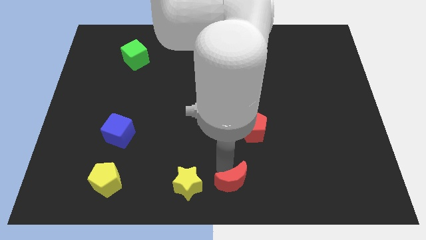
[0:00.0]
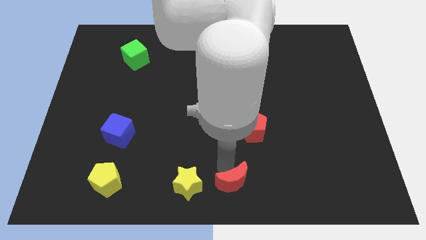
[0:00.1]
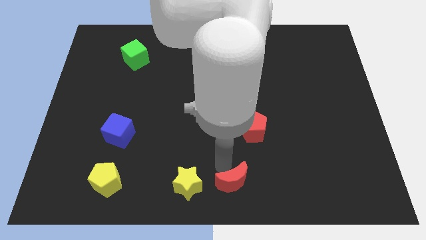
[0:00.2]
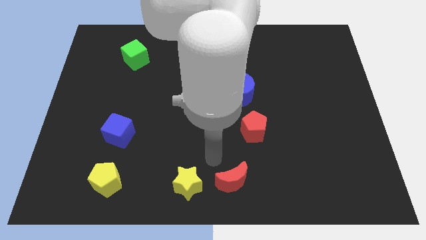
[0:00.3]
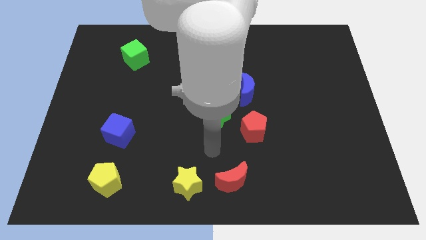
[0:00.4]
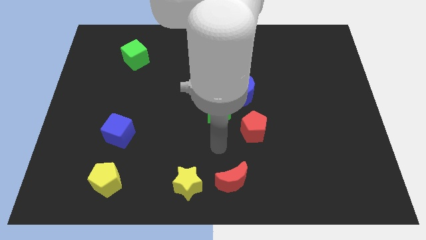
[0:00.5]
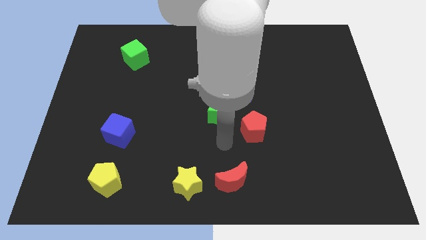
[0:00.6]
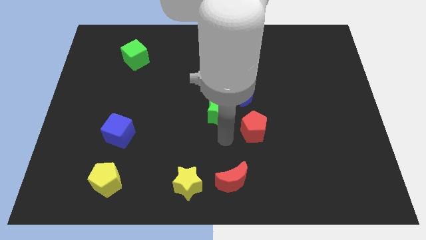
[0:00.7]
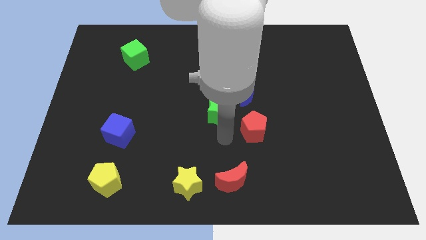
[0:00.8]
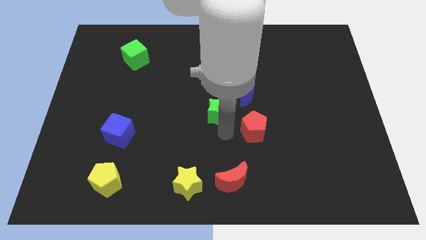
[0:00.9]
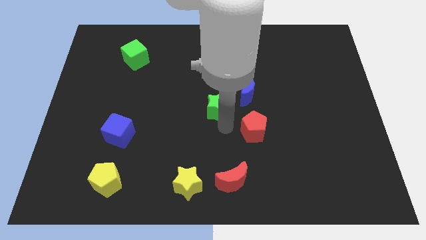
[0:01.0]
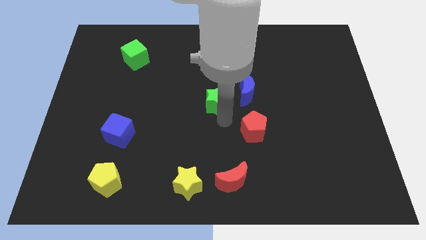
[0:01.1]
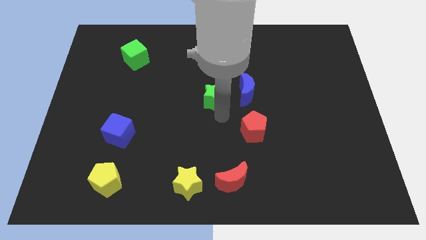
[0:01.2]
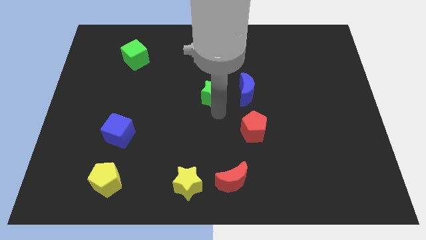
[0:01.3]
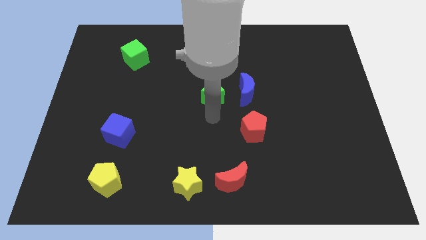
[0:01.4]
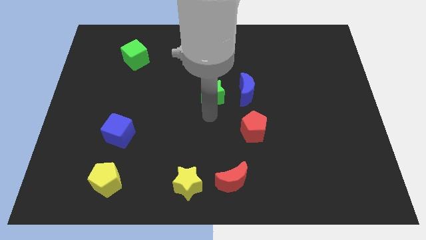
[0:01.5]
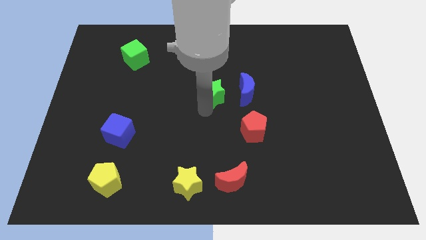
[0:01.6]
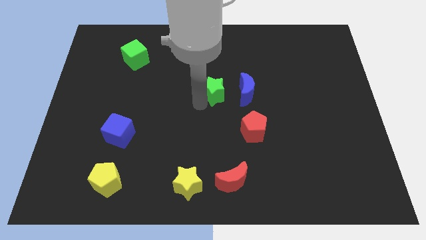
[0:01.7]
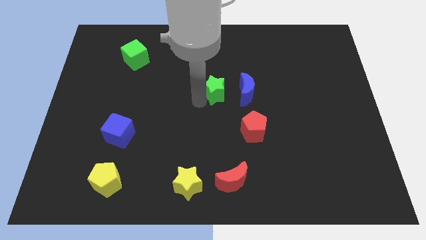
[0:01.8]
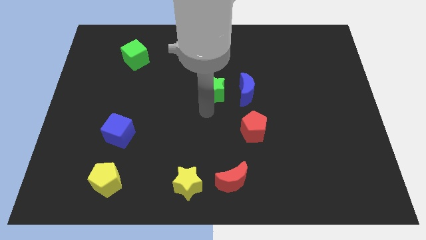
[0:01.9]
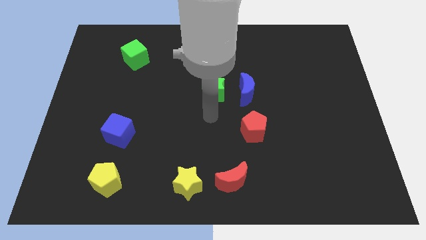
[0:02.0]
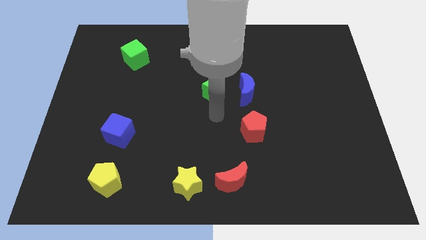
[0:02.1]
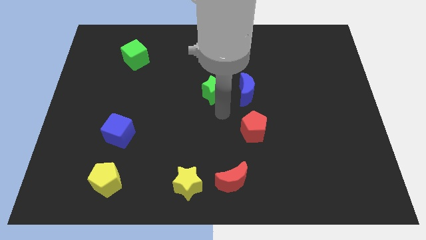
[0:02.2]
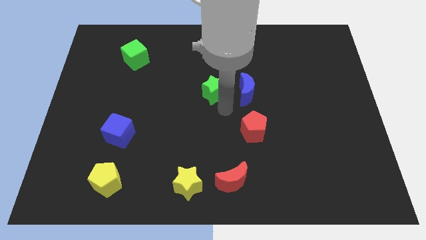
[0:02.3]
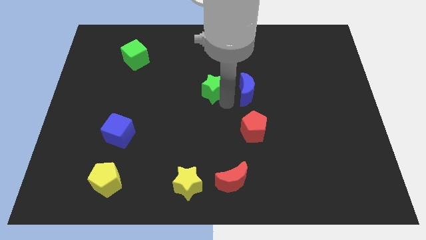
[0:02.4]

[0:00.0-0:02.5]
place green star to the left of blue moon

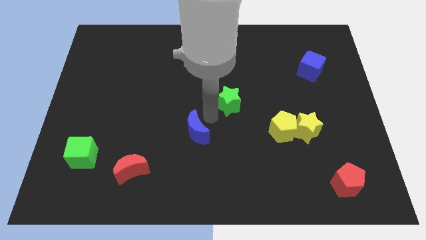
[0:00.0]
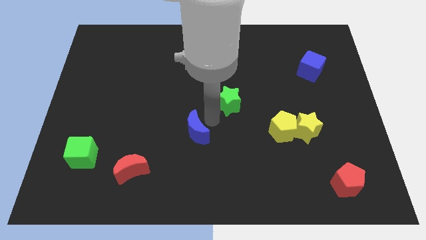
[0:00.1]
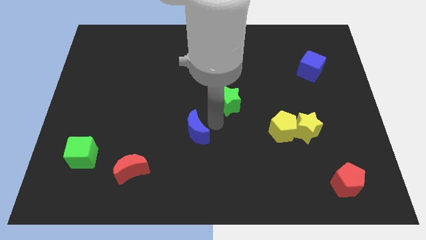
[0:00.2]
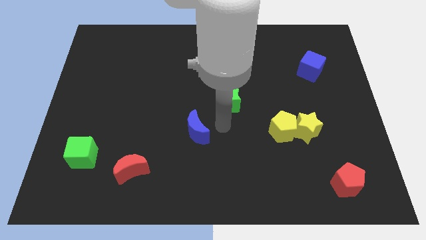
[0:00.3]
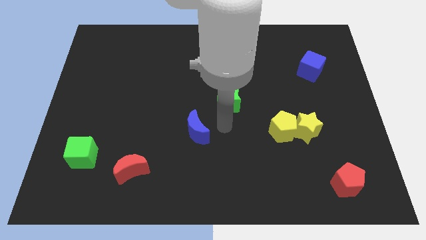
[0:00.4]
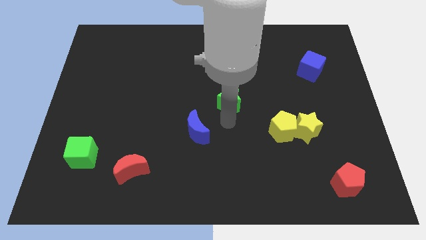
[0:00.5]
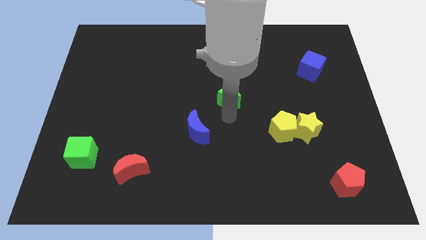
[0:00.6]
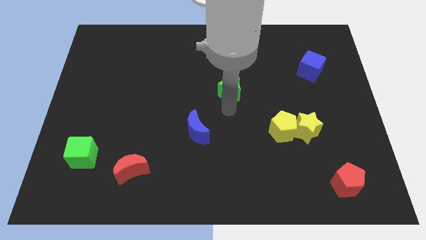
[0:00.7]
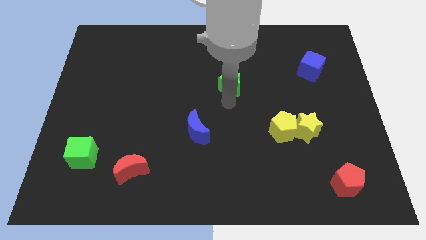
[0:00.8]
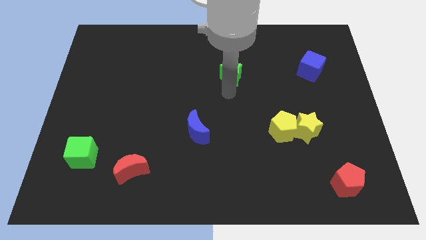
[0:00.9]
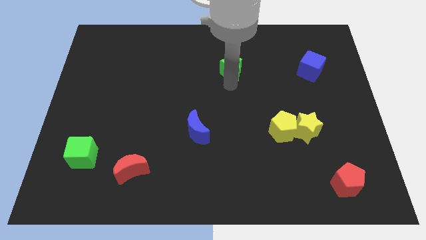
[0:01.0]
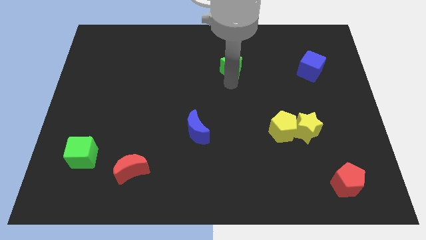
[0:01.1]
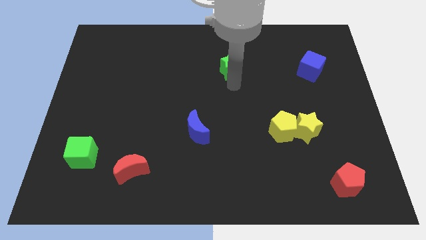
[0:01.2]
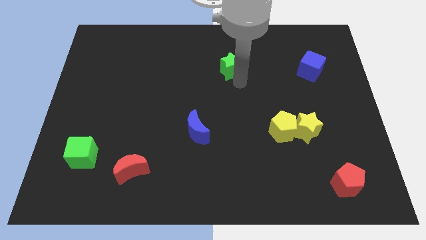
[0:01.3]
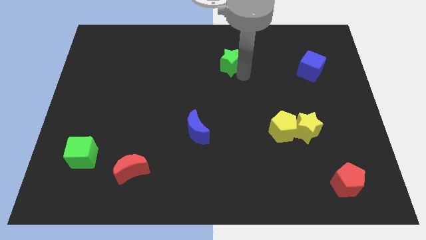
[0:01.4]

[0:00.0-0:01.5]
place green star to the left of blue cube

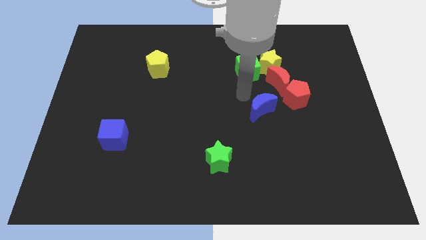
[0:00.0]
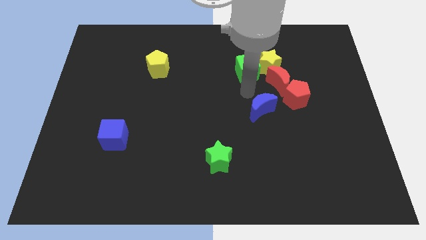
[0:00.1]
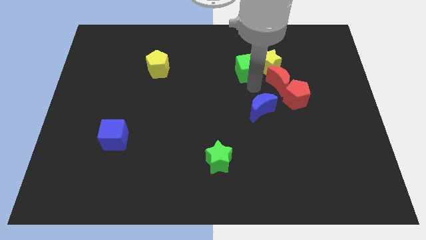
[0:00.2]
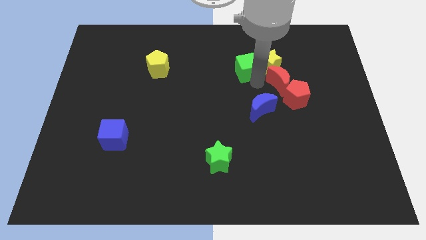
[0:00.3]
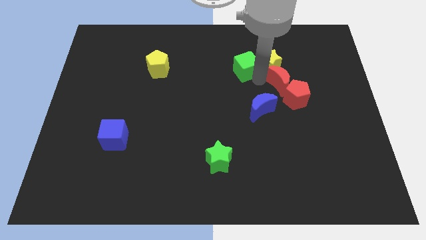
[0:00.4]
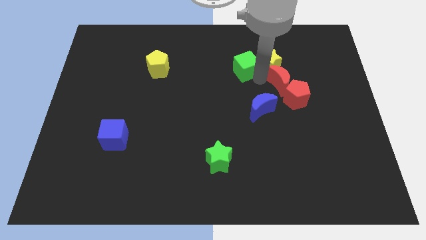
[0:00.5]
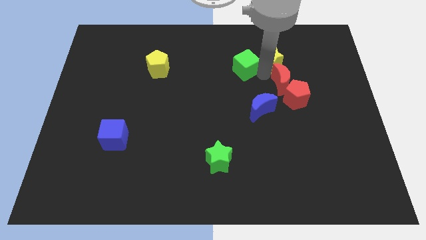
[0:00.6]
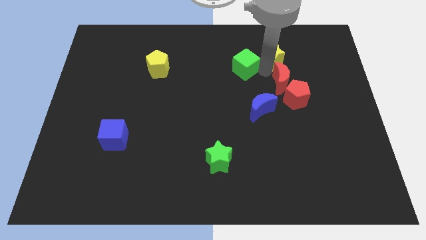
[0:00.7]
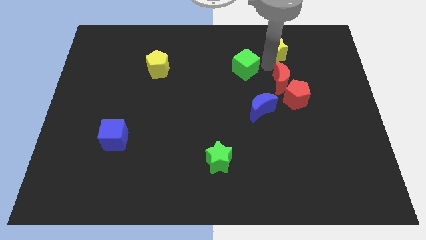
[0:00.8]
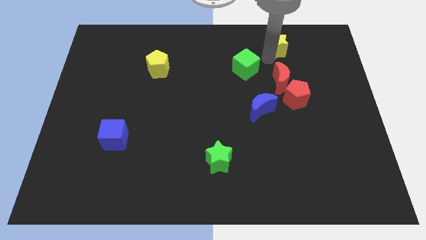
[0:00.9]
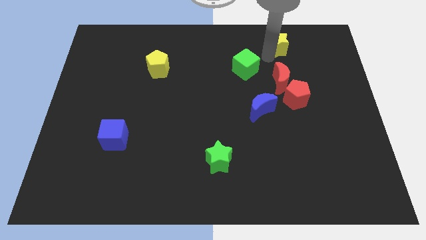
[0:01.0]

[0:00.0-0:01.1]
place the yellow star above the red moon

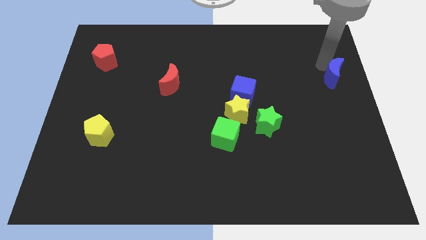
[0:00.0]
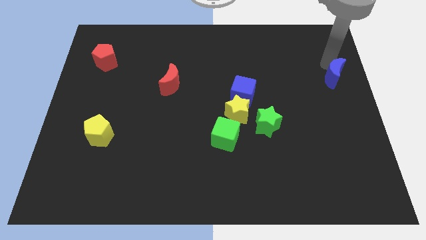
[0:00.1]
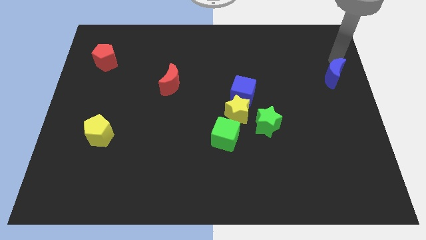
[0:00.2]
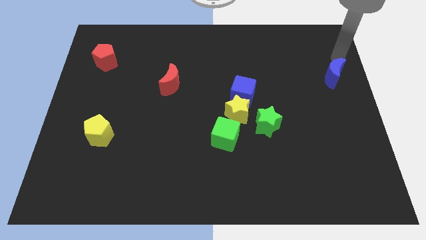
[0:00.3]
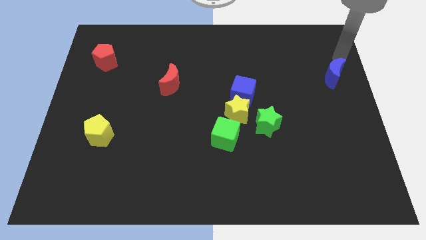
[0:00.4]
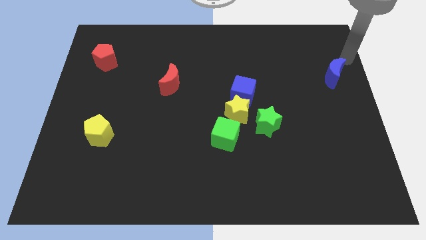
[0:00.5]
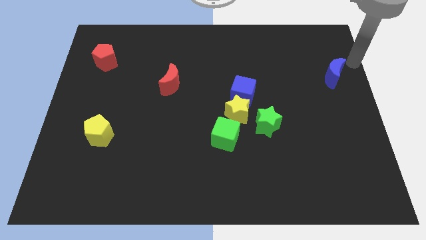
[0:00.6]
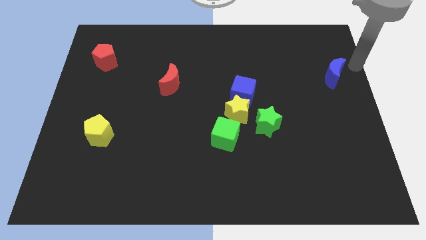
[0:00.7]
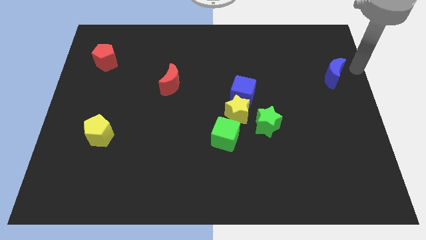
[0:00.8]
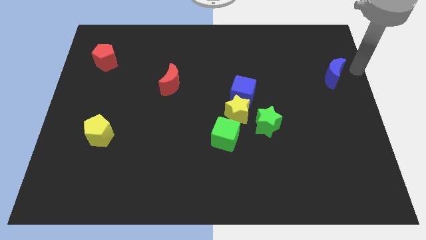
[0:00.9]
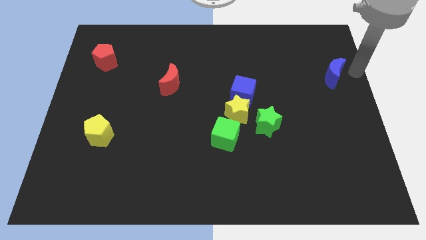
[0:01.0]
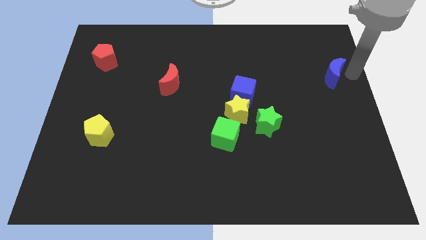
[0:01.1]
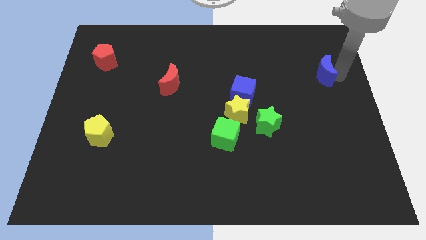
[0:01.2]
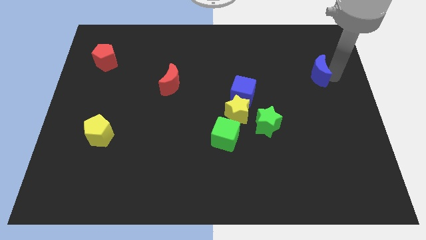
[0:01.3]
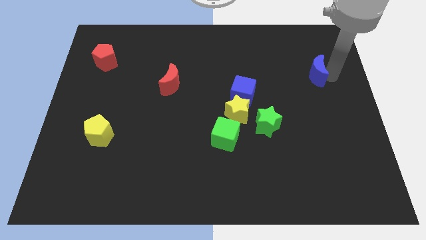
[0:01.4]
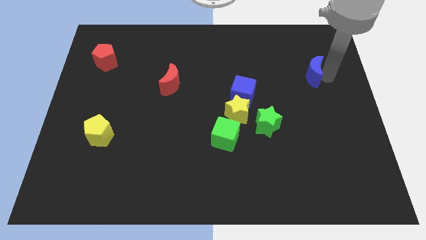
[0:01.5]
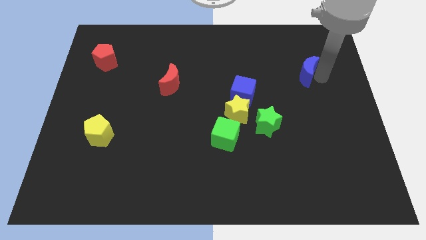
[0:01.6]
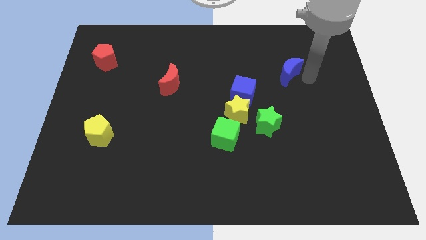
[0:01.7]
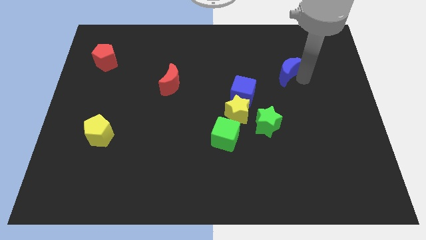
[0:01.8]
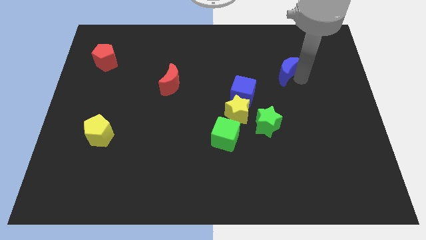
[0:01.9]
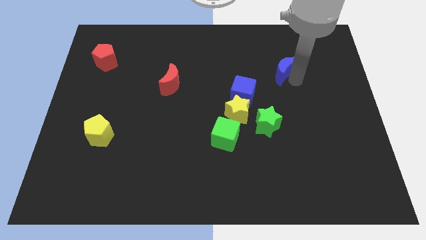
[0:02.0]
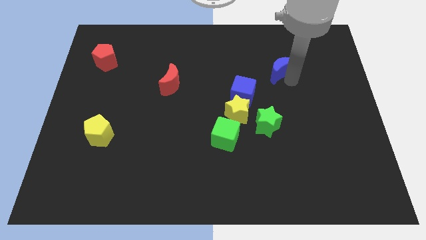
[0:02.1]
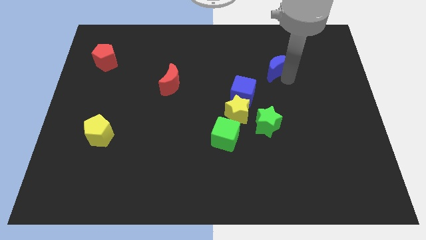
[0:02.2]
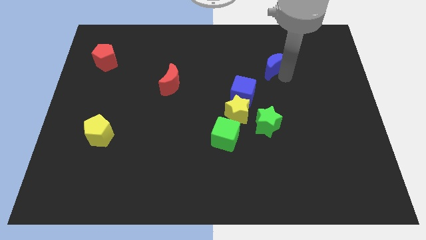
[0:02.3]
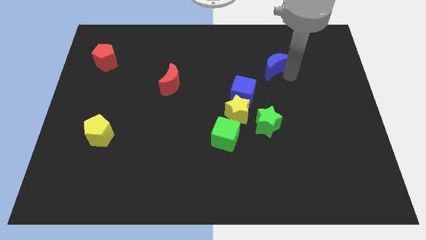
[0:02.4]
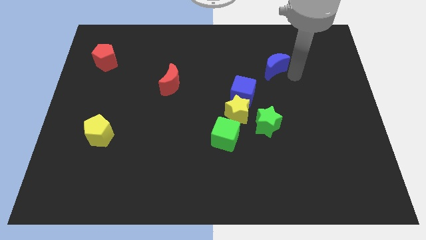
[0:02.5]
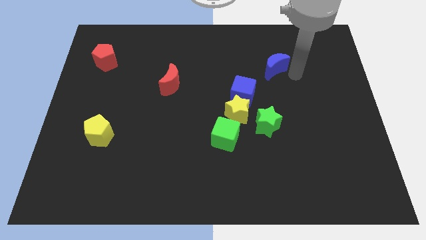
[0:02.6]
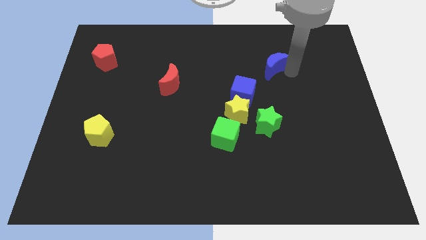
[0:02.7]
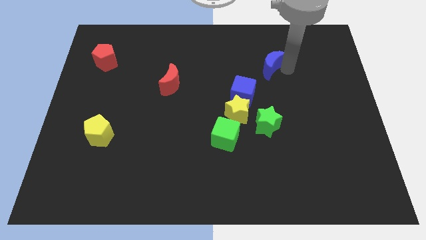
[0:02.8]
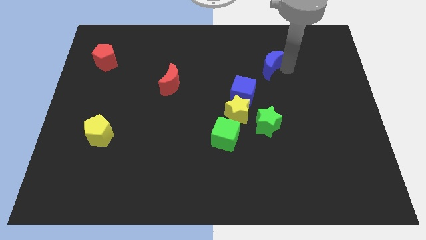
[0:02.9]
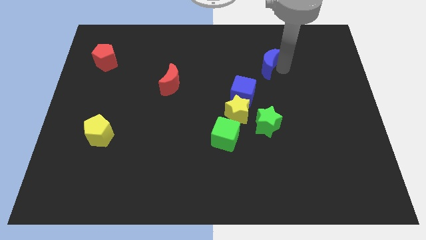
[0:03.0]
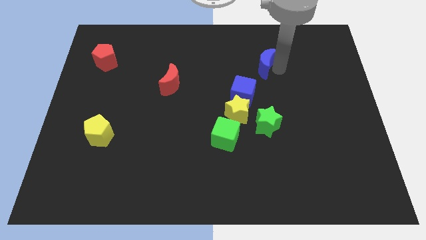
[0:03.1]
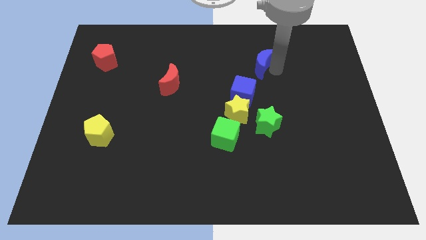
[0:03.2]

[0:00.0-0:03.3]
push the blue crescent towards the top right side of the blue cube

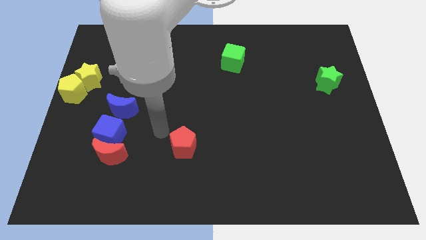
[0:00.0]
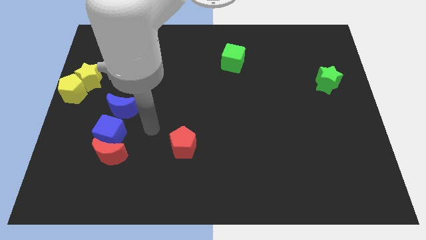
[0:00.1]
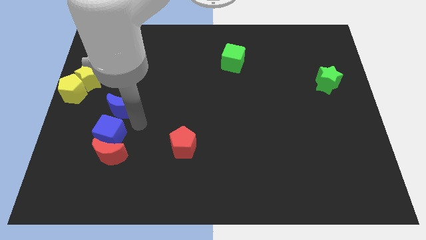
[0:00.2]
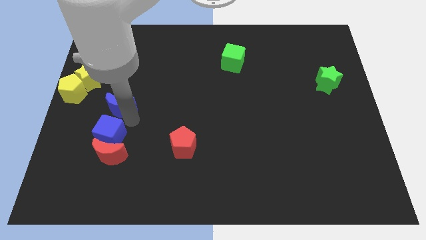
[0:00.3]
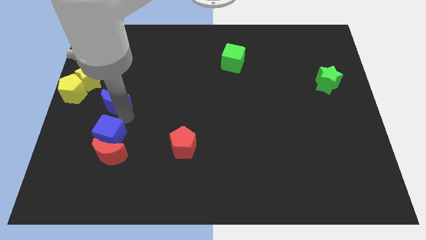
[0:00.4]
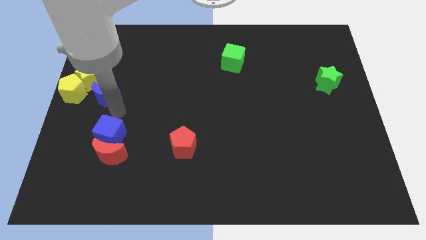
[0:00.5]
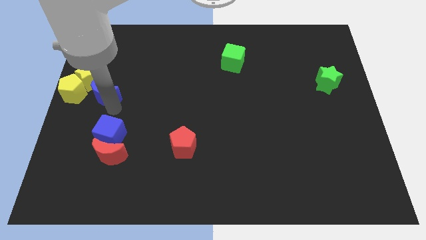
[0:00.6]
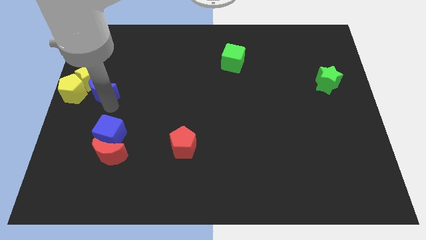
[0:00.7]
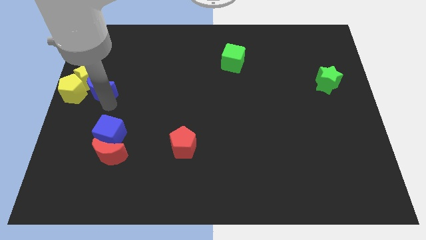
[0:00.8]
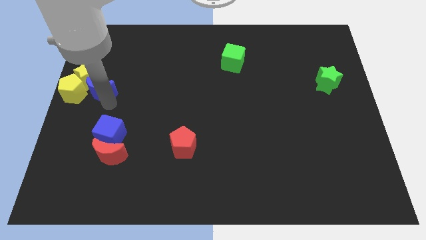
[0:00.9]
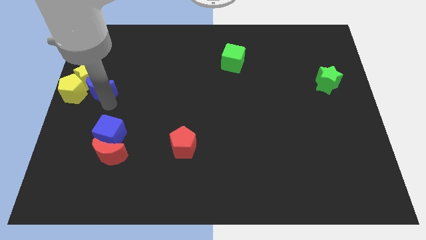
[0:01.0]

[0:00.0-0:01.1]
move blue moon into yellow star
